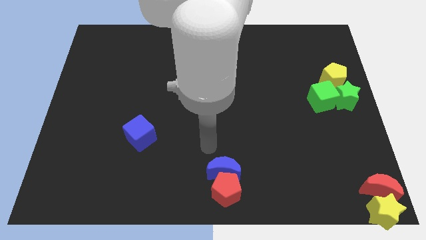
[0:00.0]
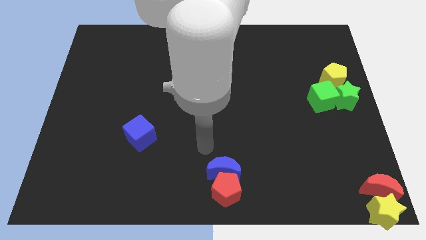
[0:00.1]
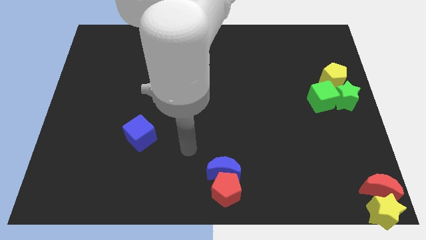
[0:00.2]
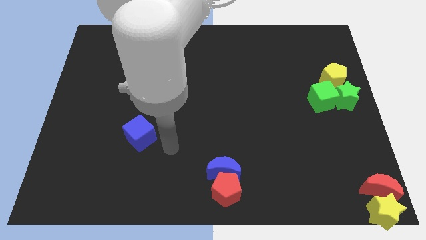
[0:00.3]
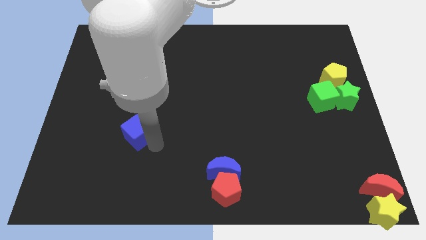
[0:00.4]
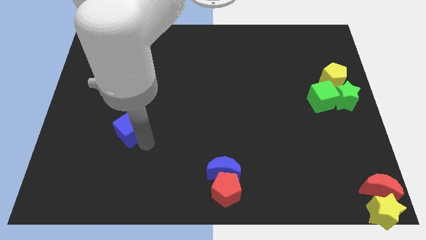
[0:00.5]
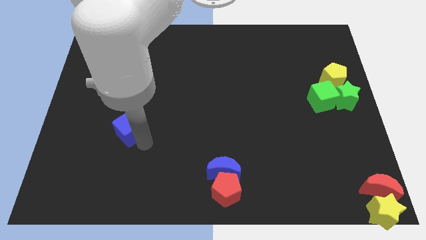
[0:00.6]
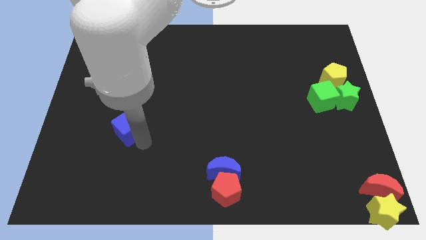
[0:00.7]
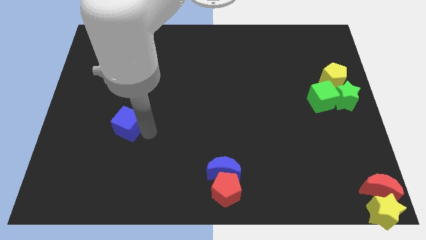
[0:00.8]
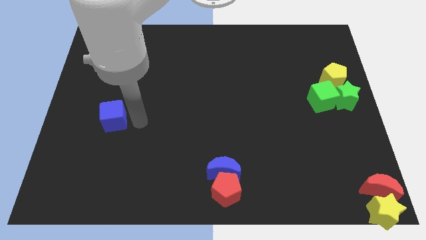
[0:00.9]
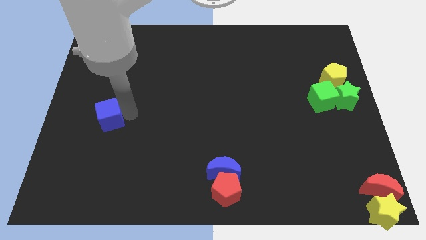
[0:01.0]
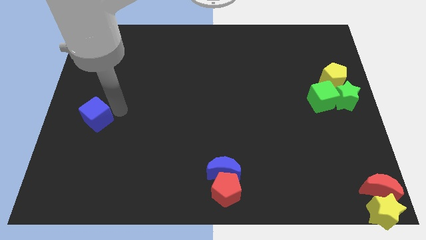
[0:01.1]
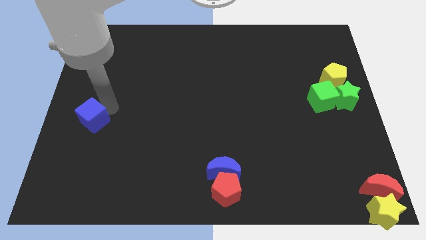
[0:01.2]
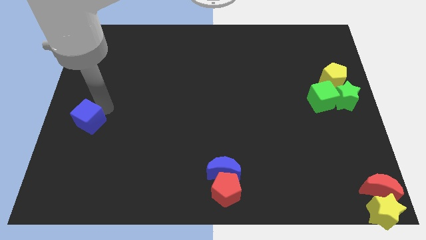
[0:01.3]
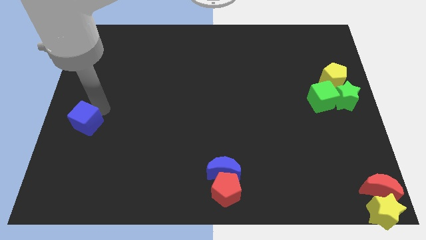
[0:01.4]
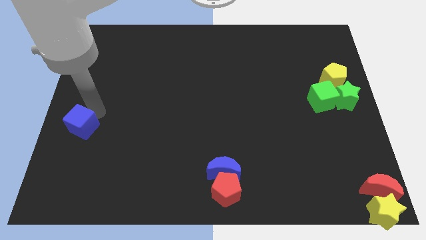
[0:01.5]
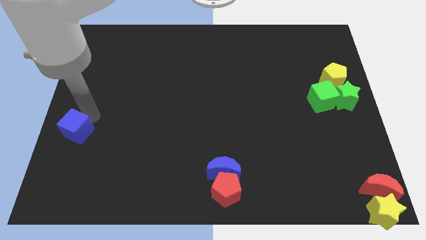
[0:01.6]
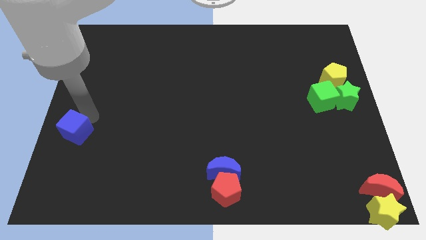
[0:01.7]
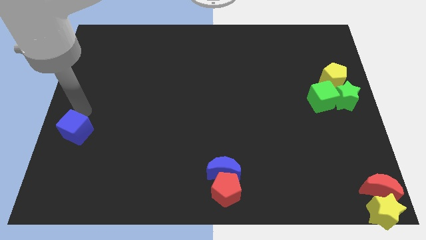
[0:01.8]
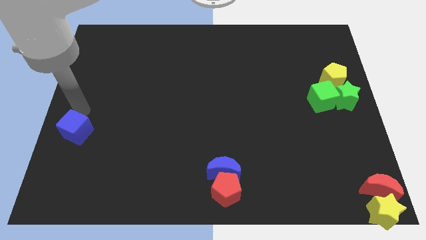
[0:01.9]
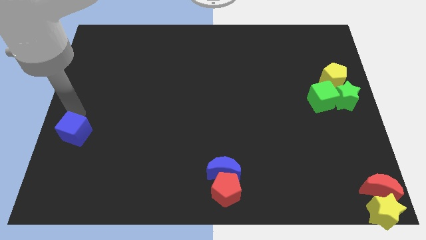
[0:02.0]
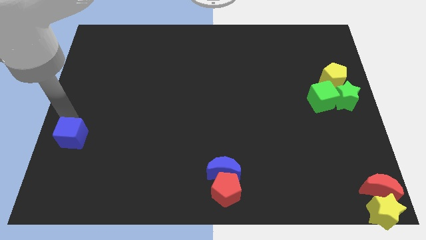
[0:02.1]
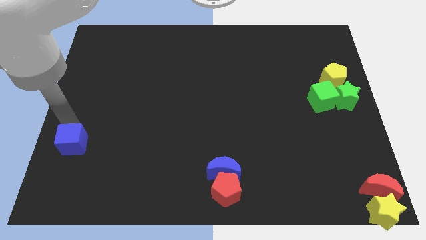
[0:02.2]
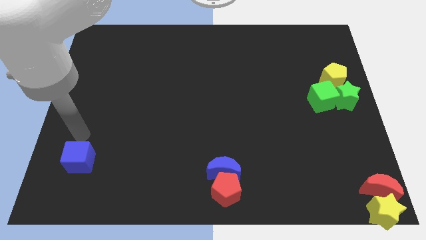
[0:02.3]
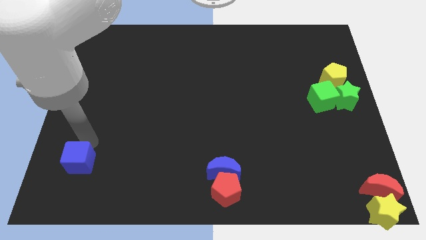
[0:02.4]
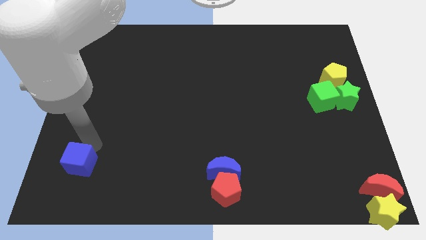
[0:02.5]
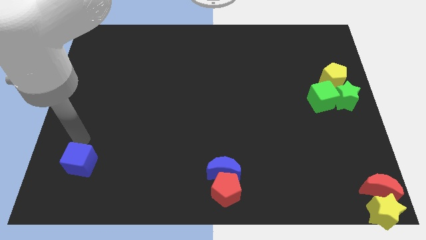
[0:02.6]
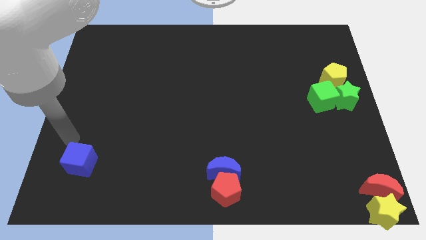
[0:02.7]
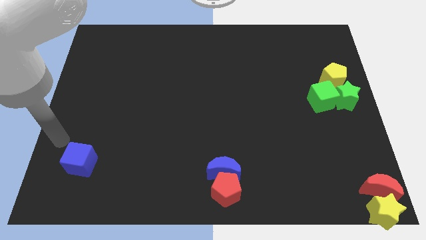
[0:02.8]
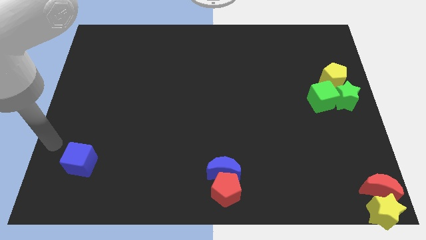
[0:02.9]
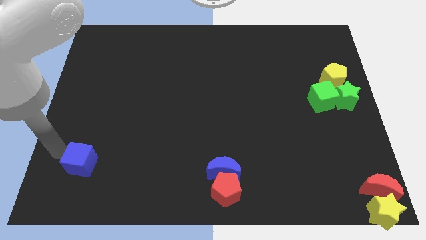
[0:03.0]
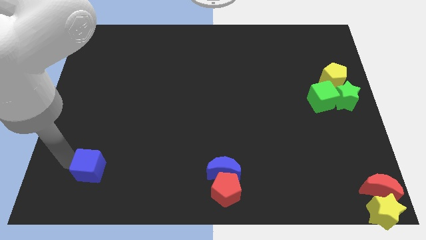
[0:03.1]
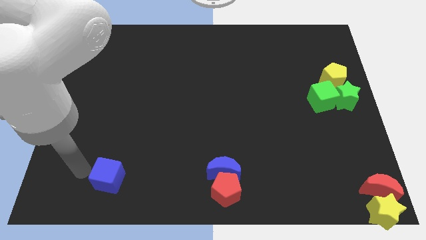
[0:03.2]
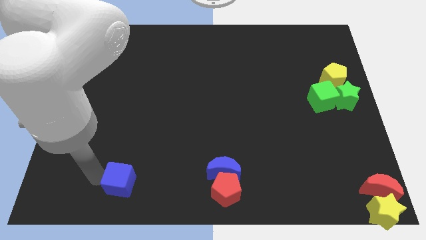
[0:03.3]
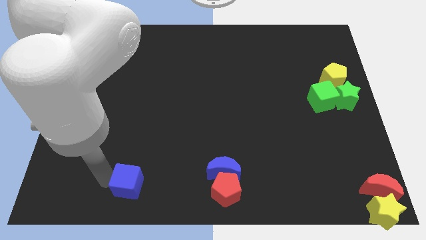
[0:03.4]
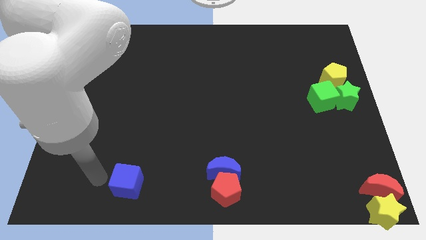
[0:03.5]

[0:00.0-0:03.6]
put the blue cube parallel left to the red pentagon

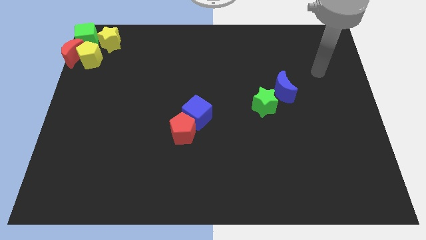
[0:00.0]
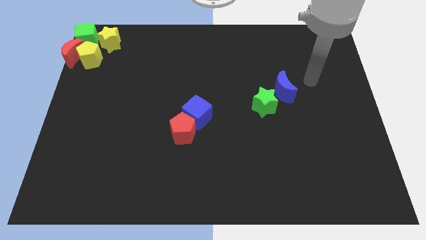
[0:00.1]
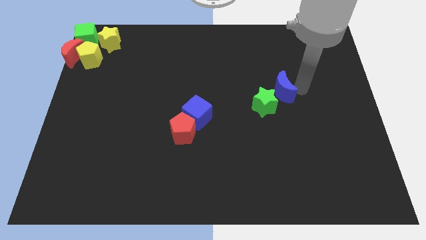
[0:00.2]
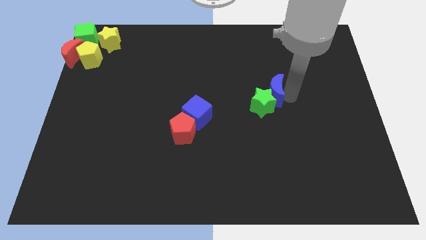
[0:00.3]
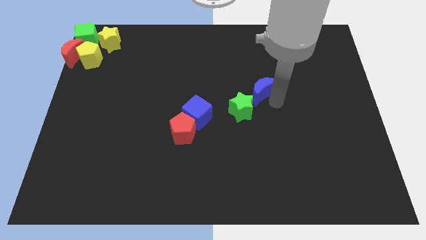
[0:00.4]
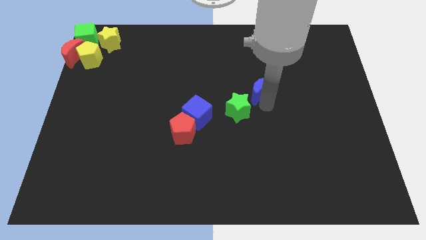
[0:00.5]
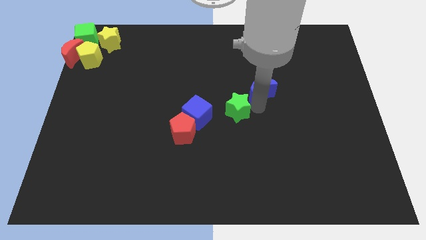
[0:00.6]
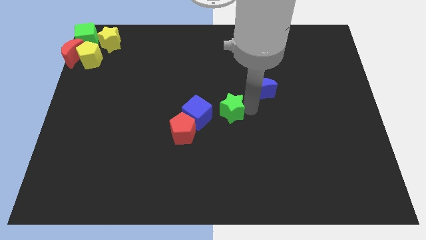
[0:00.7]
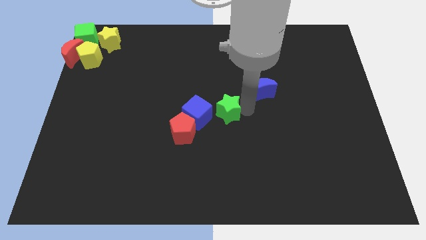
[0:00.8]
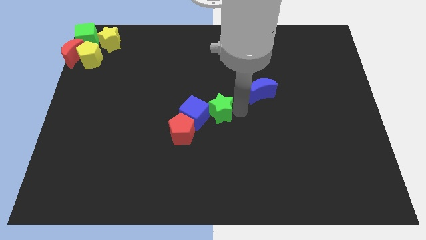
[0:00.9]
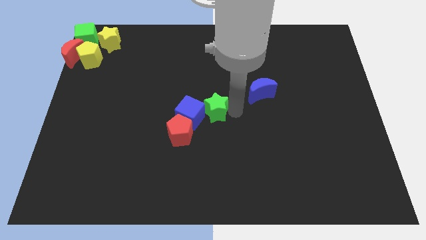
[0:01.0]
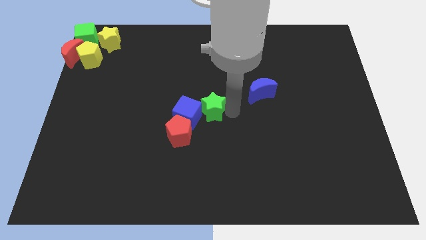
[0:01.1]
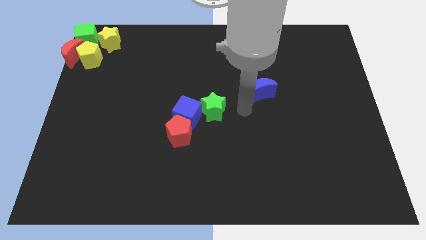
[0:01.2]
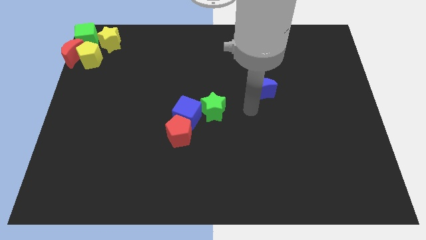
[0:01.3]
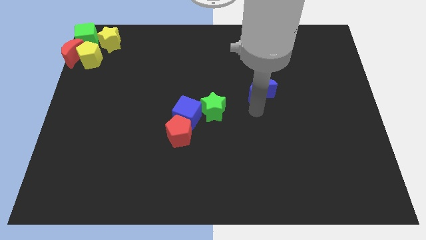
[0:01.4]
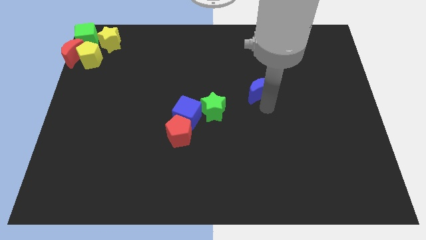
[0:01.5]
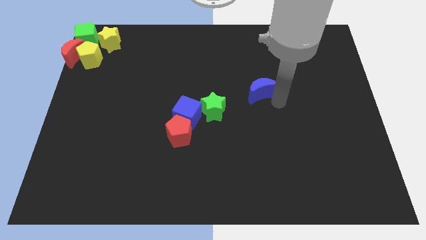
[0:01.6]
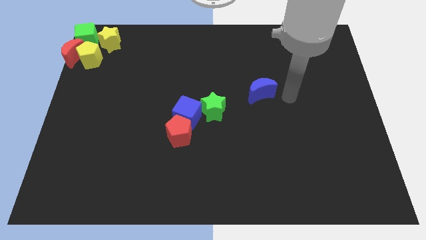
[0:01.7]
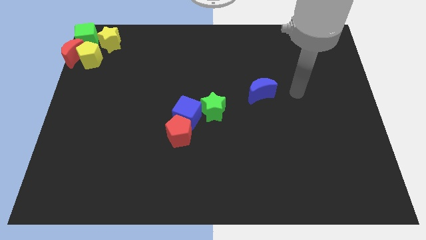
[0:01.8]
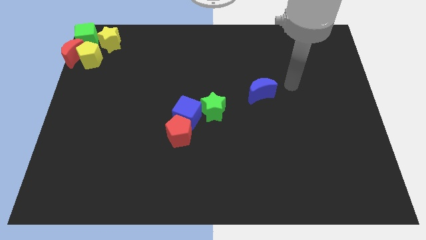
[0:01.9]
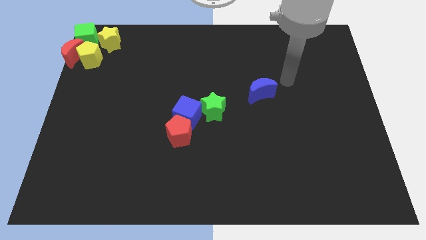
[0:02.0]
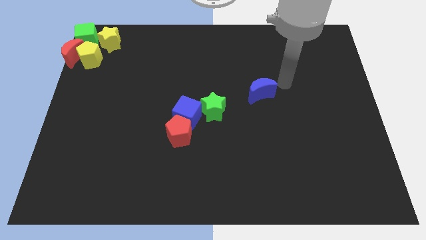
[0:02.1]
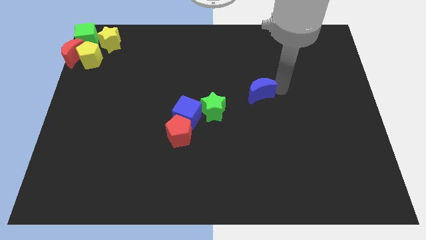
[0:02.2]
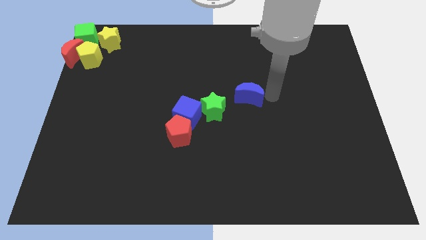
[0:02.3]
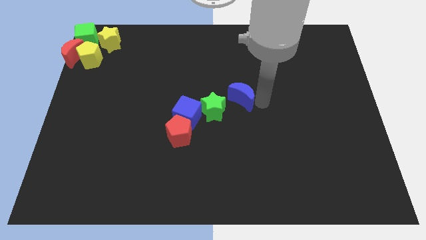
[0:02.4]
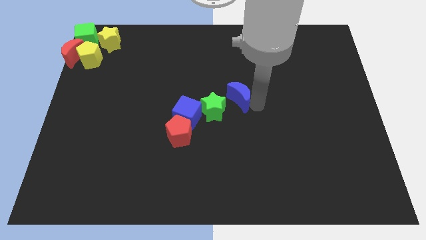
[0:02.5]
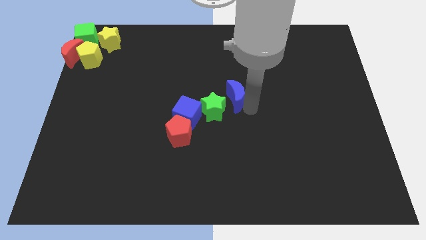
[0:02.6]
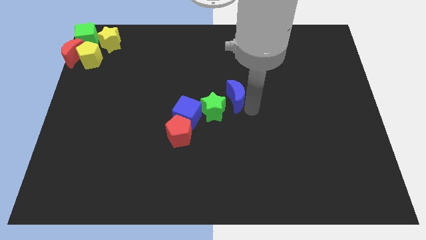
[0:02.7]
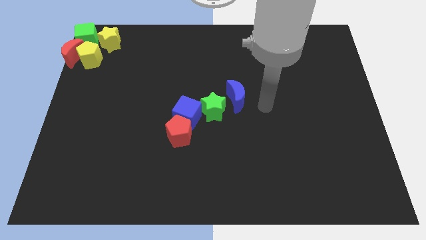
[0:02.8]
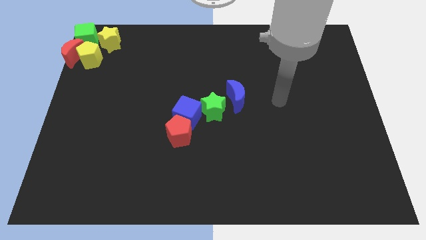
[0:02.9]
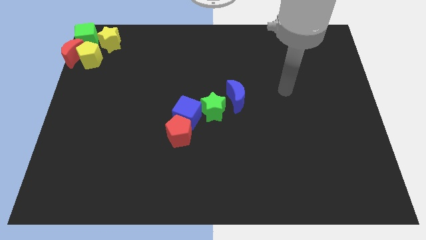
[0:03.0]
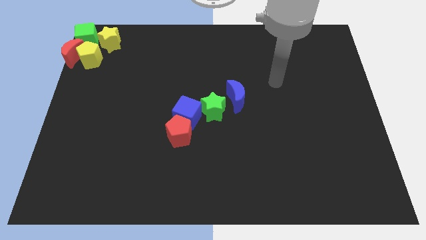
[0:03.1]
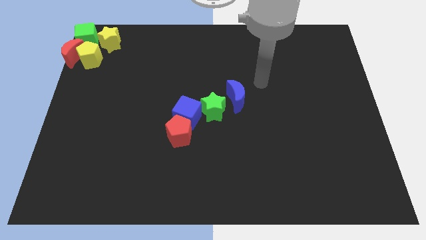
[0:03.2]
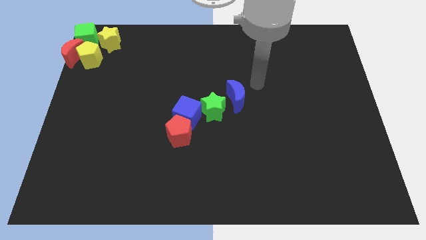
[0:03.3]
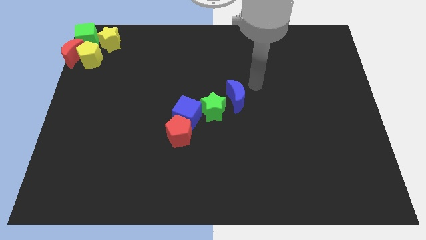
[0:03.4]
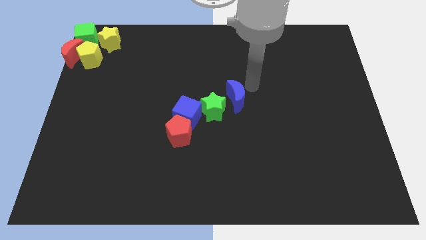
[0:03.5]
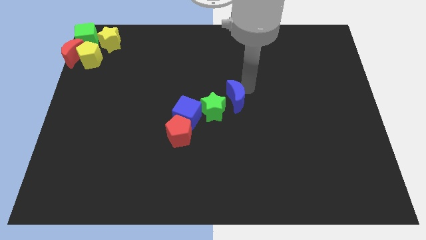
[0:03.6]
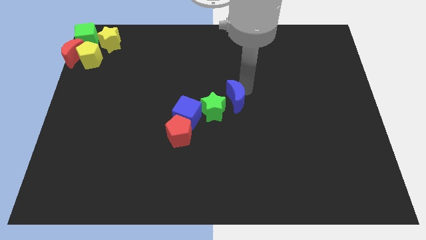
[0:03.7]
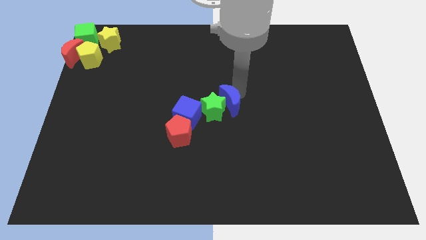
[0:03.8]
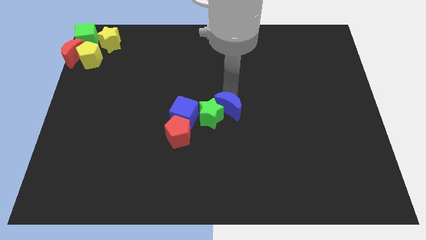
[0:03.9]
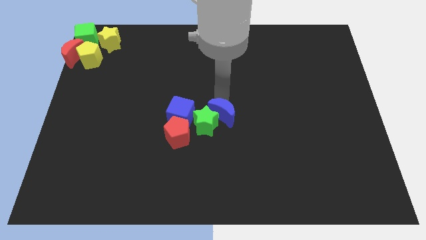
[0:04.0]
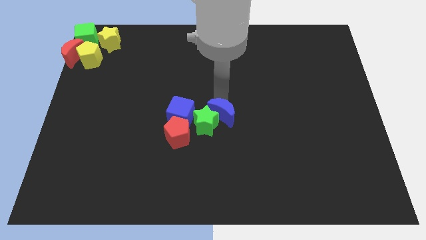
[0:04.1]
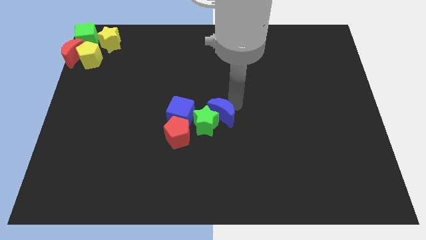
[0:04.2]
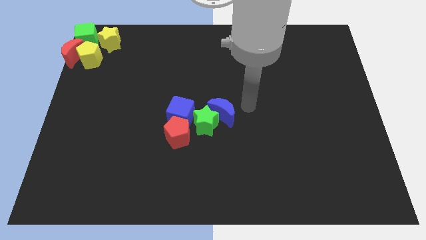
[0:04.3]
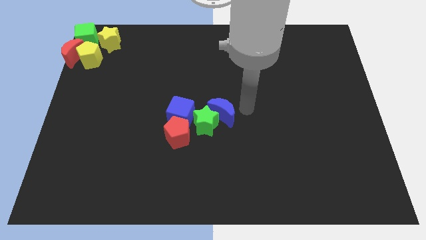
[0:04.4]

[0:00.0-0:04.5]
slide the green star and the blue moon to the center of the board

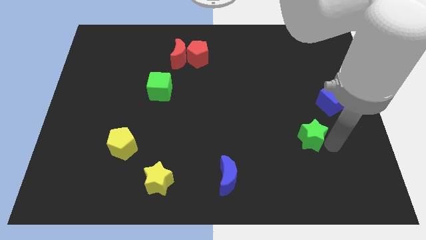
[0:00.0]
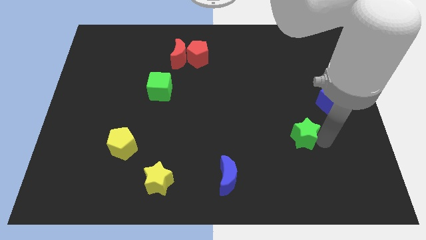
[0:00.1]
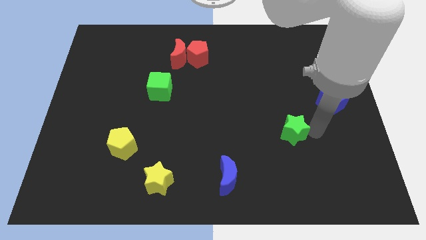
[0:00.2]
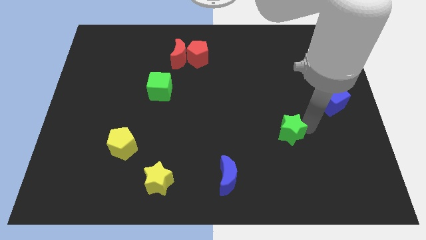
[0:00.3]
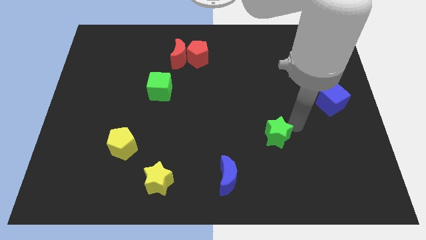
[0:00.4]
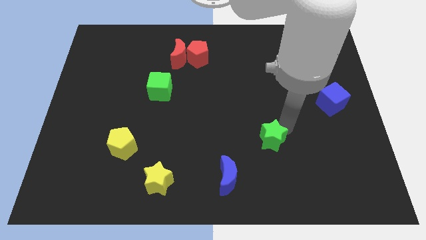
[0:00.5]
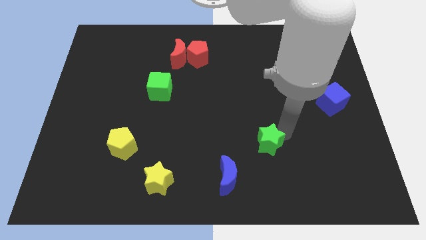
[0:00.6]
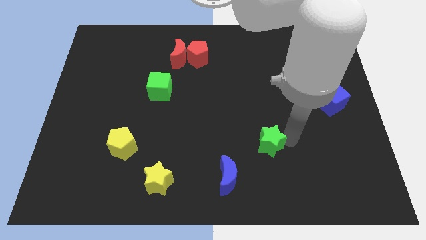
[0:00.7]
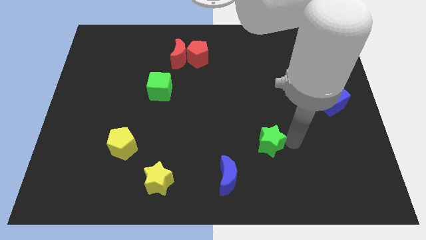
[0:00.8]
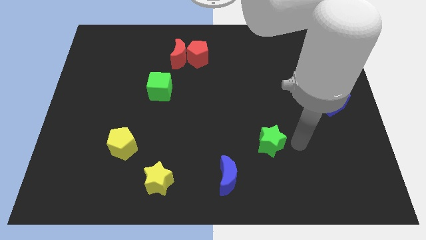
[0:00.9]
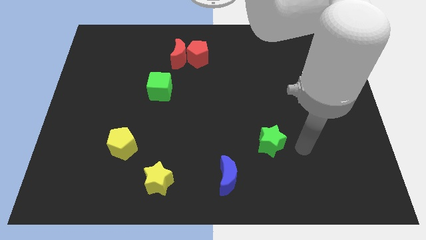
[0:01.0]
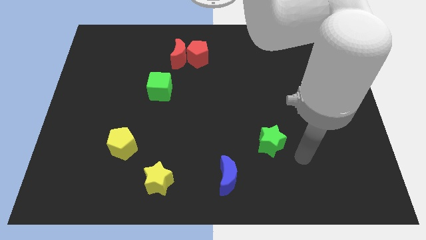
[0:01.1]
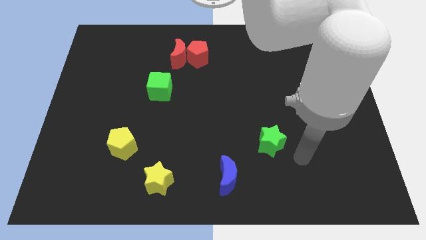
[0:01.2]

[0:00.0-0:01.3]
place the green star diagonally to the right of the blue crescent
